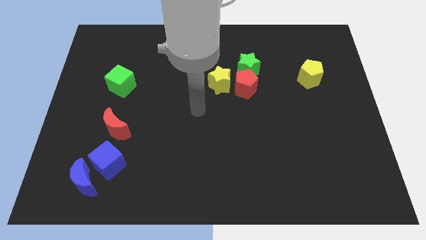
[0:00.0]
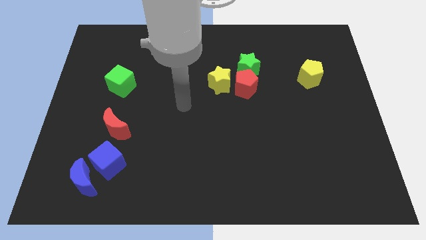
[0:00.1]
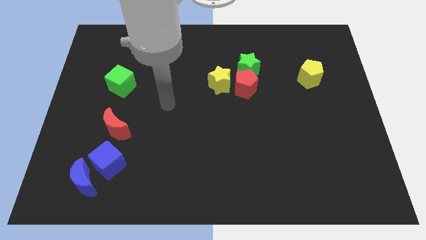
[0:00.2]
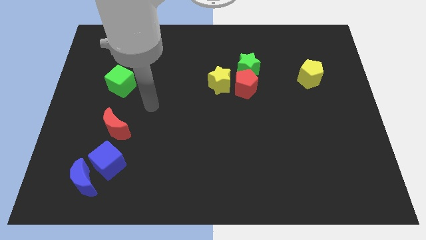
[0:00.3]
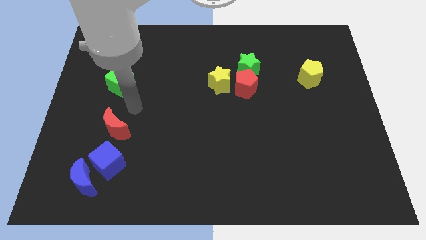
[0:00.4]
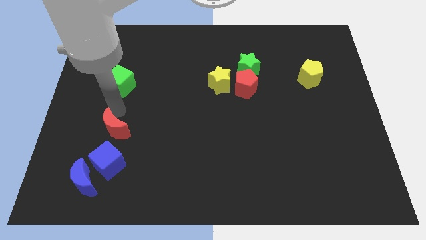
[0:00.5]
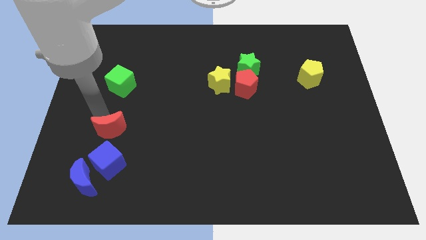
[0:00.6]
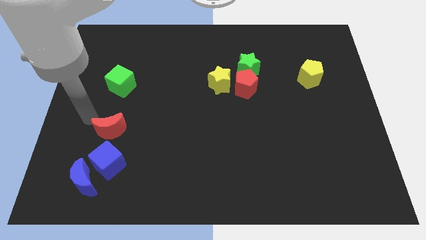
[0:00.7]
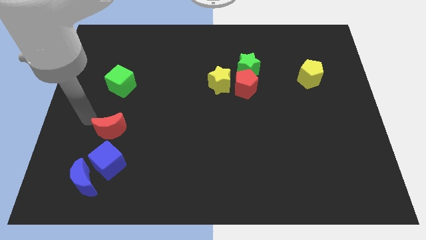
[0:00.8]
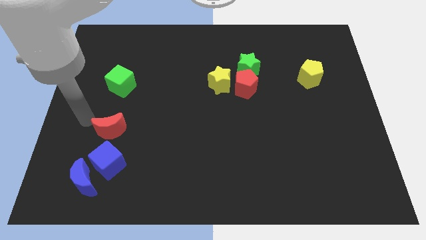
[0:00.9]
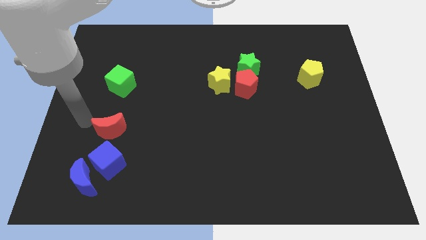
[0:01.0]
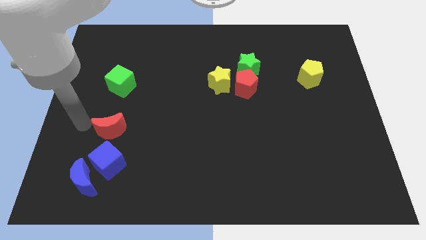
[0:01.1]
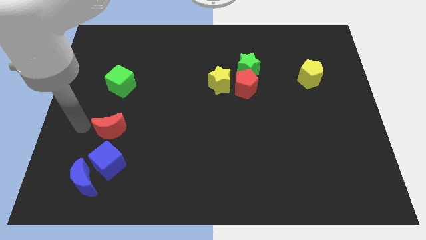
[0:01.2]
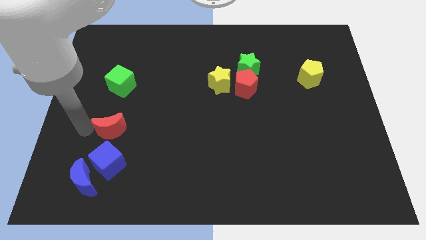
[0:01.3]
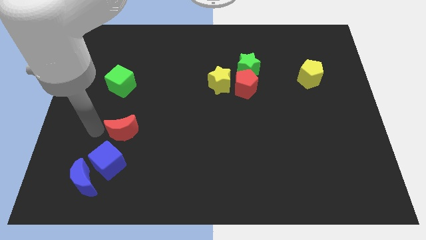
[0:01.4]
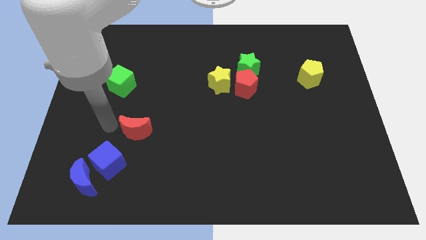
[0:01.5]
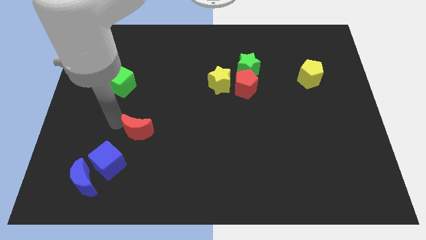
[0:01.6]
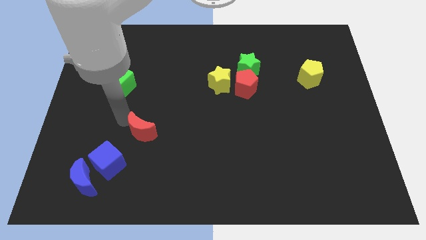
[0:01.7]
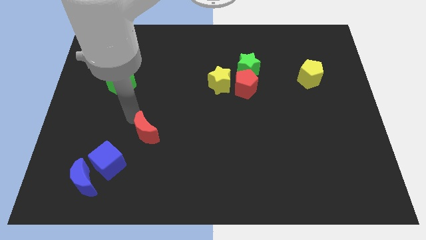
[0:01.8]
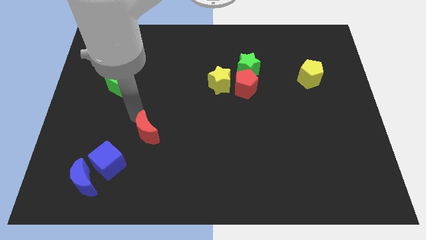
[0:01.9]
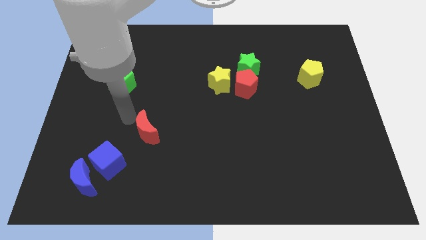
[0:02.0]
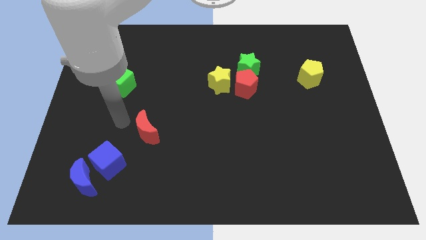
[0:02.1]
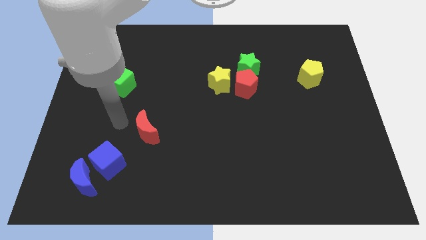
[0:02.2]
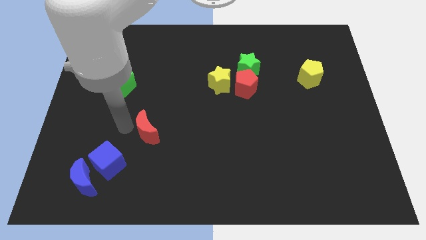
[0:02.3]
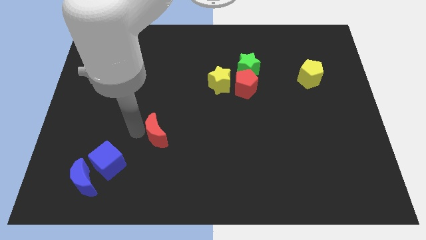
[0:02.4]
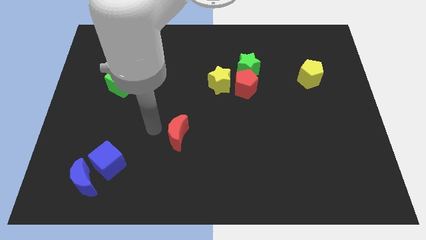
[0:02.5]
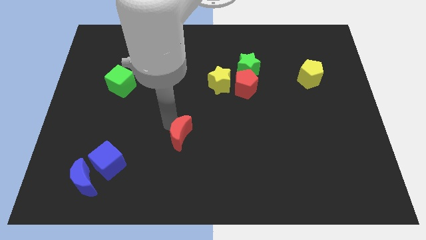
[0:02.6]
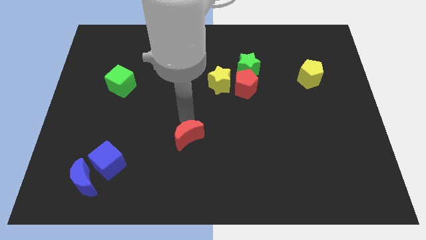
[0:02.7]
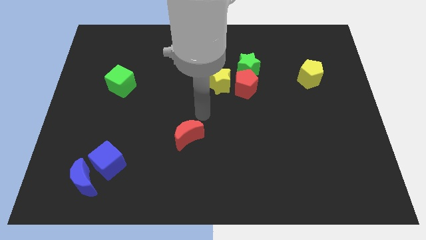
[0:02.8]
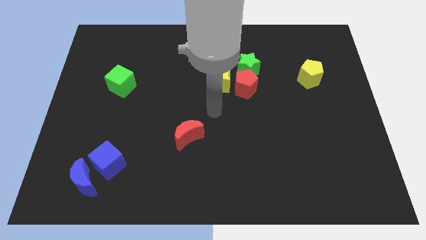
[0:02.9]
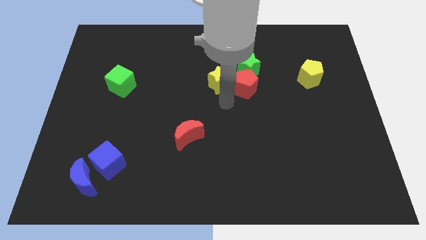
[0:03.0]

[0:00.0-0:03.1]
push the red moon towards the center of the board

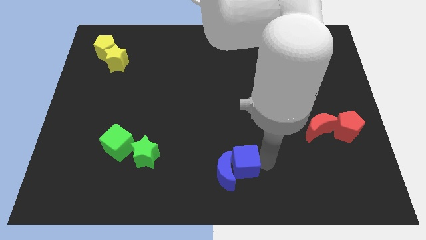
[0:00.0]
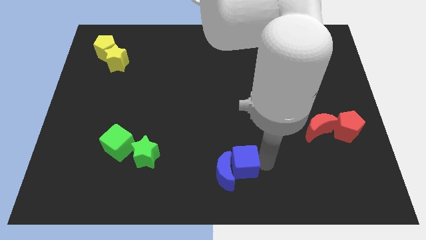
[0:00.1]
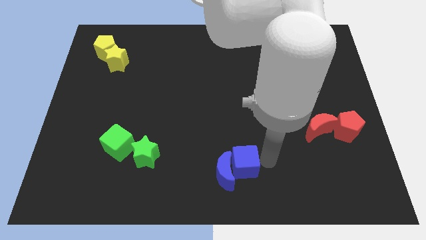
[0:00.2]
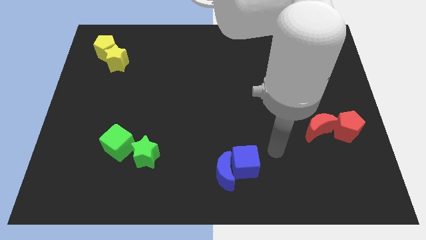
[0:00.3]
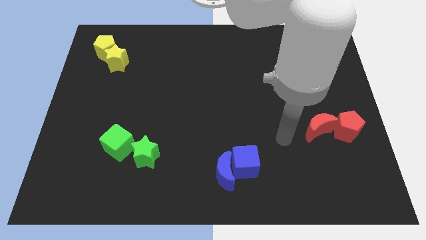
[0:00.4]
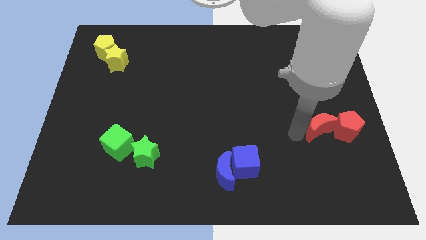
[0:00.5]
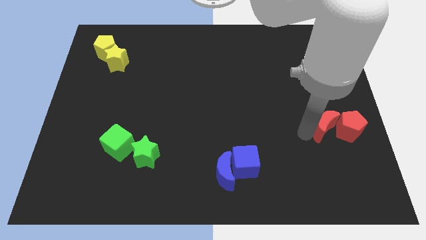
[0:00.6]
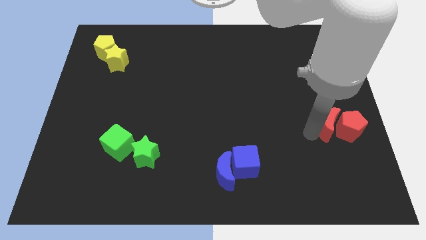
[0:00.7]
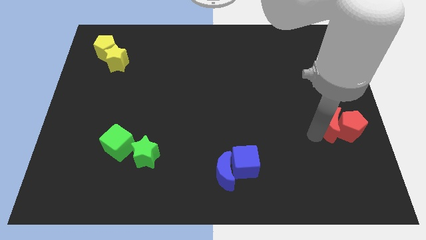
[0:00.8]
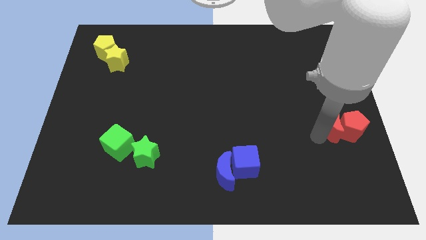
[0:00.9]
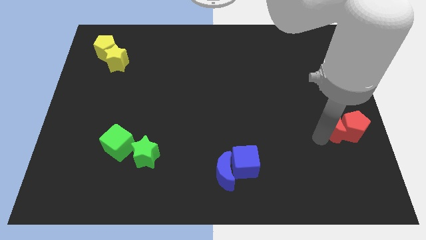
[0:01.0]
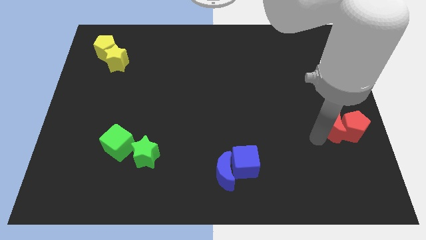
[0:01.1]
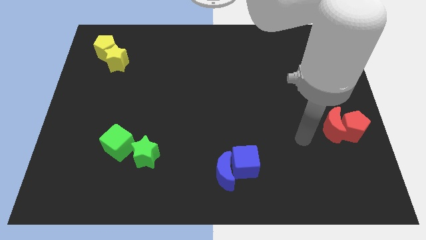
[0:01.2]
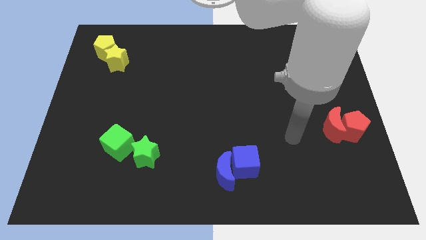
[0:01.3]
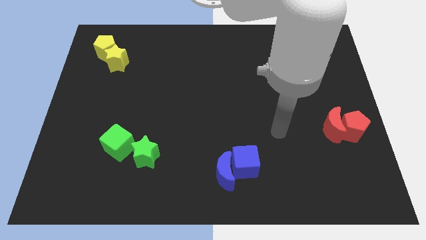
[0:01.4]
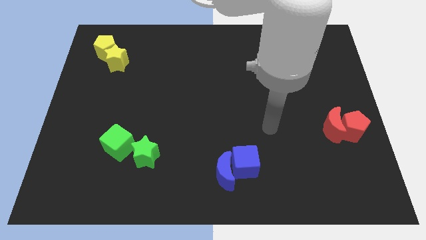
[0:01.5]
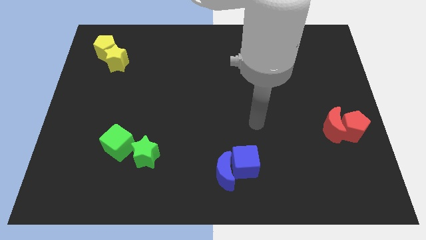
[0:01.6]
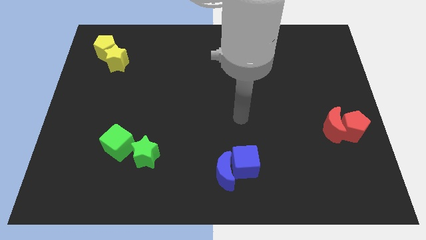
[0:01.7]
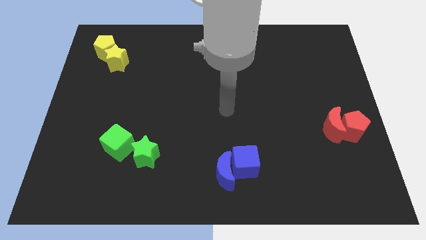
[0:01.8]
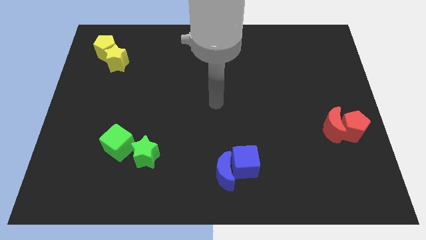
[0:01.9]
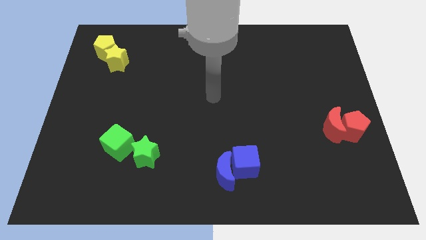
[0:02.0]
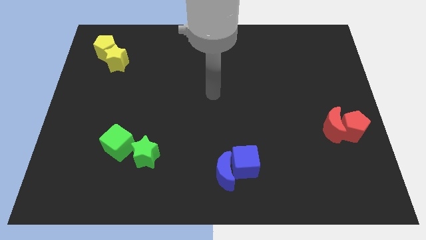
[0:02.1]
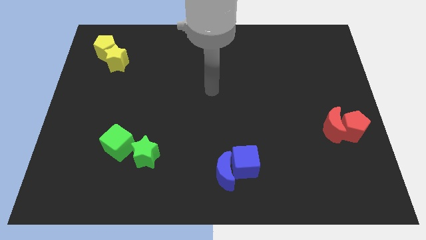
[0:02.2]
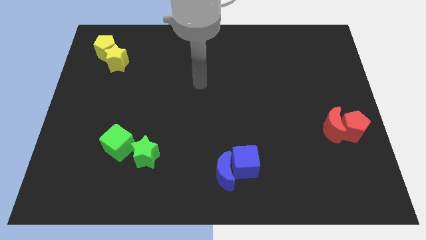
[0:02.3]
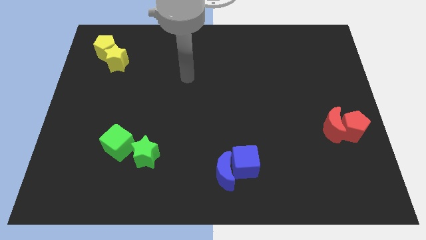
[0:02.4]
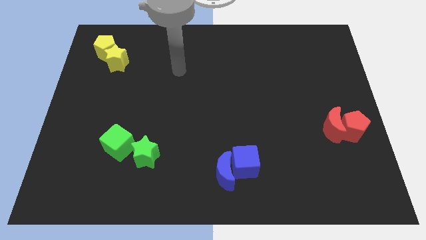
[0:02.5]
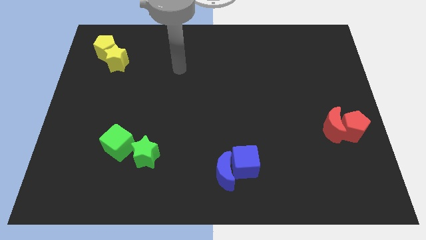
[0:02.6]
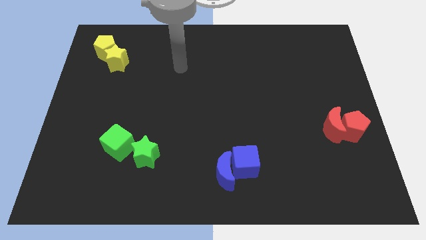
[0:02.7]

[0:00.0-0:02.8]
push the red crescent into the red pentagon towards the right center of the board

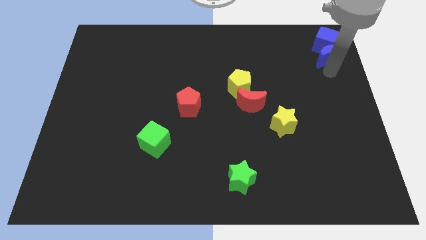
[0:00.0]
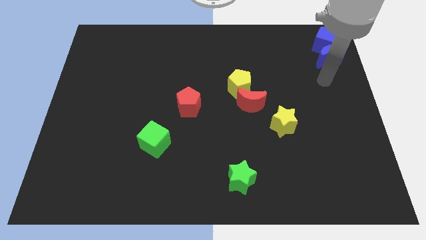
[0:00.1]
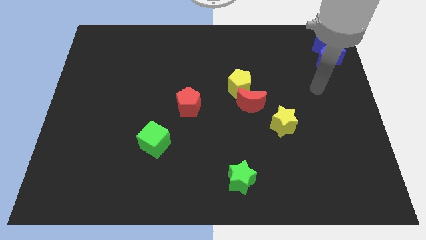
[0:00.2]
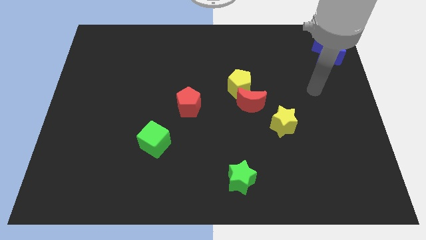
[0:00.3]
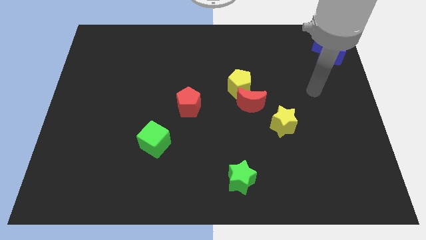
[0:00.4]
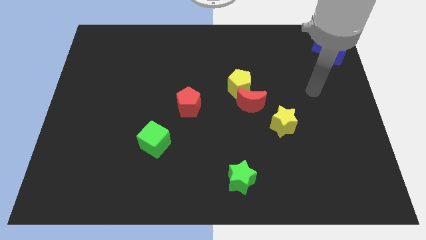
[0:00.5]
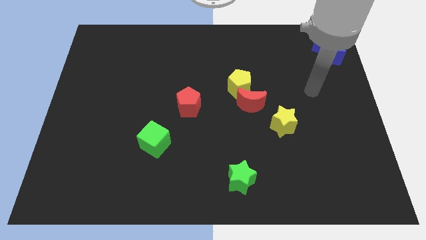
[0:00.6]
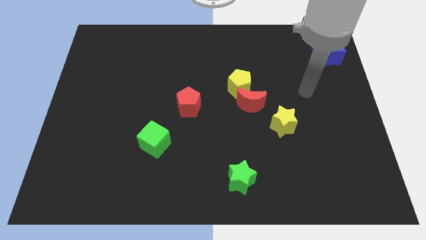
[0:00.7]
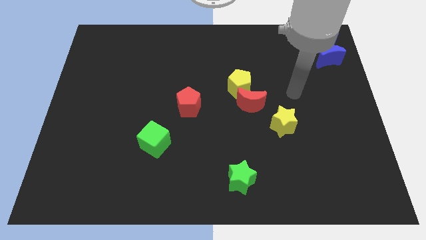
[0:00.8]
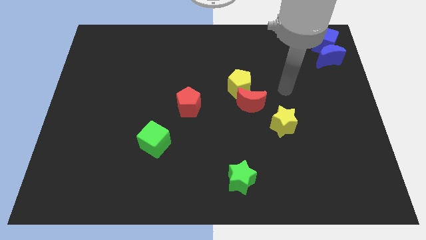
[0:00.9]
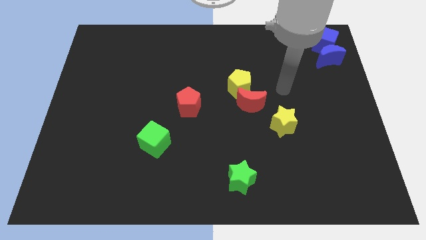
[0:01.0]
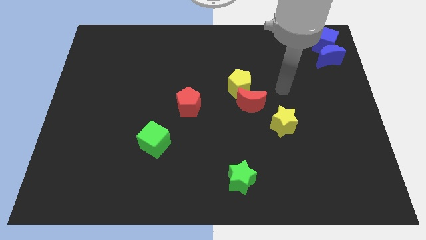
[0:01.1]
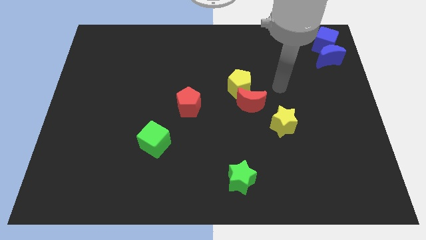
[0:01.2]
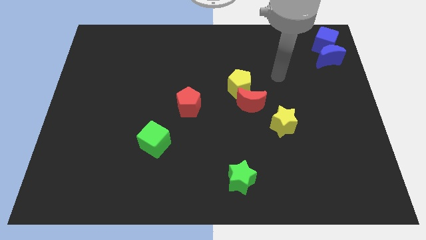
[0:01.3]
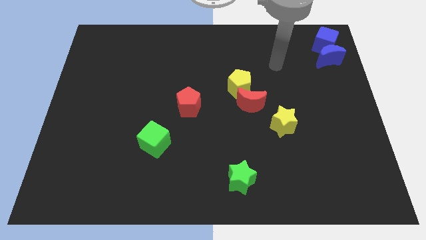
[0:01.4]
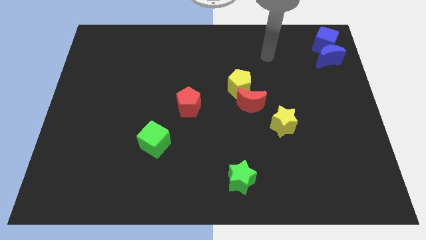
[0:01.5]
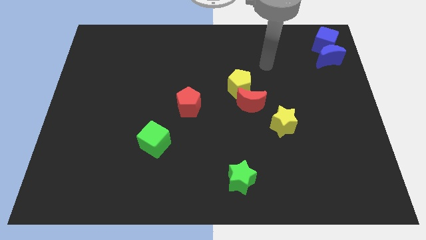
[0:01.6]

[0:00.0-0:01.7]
move your hand away from the blue moon

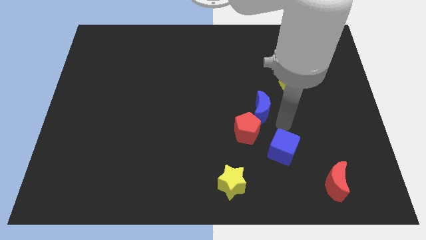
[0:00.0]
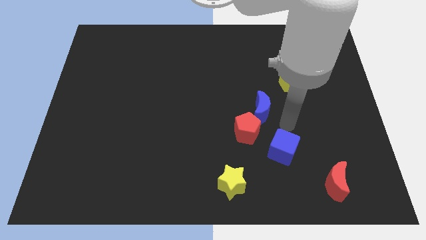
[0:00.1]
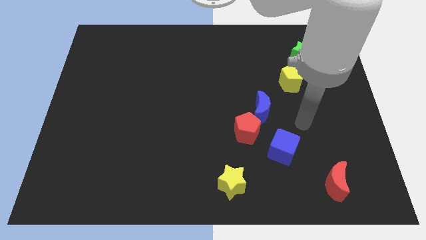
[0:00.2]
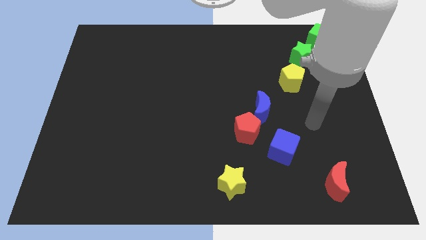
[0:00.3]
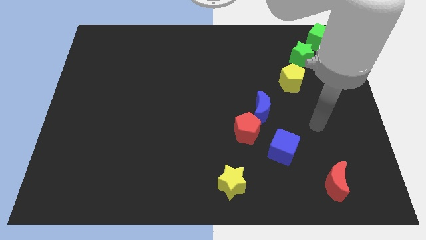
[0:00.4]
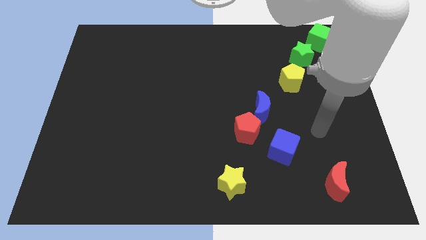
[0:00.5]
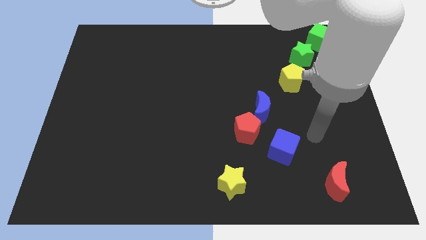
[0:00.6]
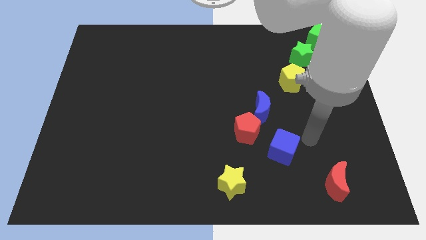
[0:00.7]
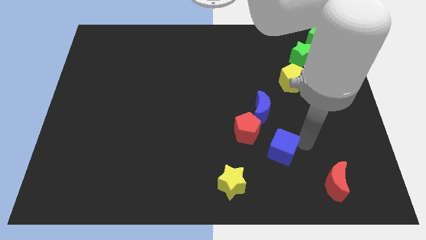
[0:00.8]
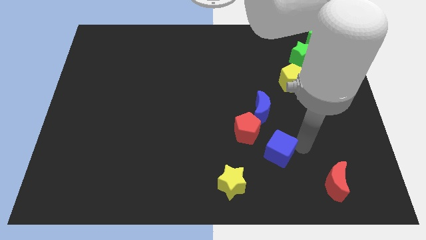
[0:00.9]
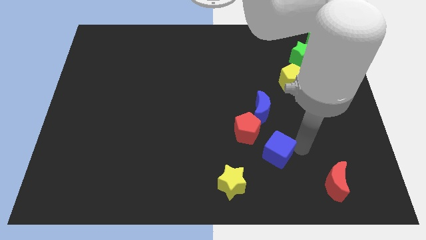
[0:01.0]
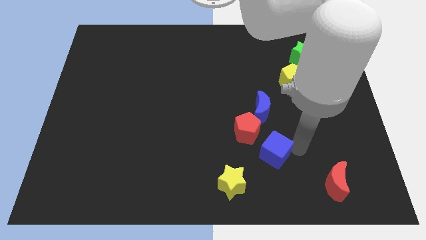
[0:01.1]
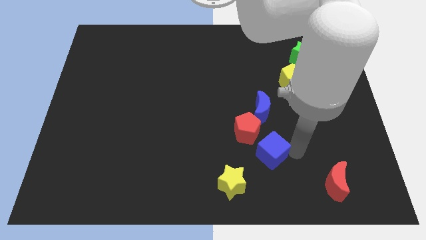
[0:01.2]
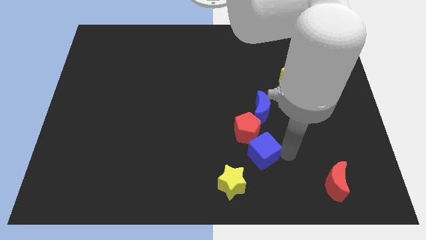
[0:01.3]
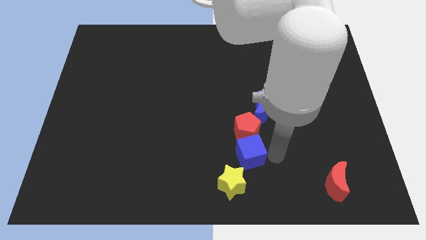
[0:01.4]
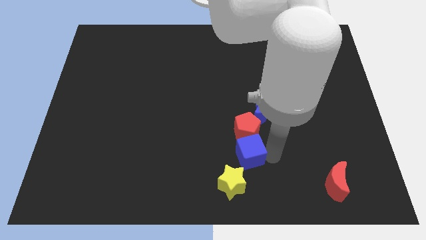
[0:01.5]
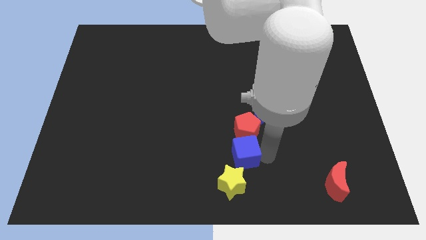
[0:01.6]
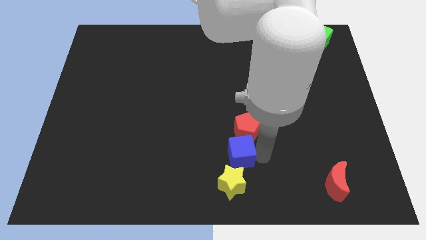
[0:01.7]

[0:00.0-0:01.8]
put the blue cube between the red pentagon and yellow star
